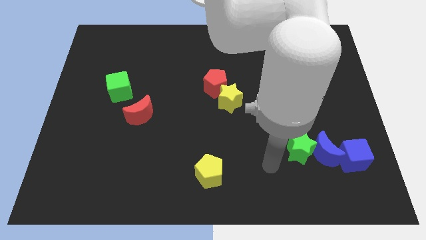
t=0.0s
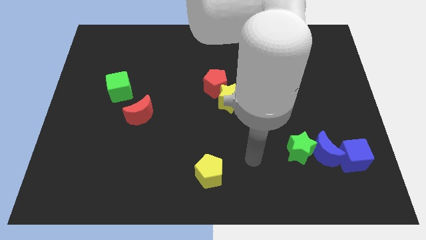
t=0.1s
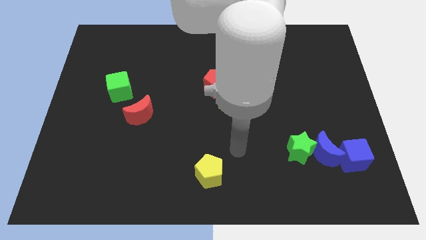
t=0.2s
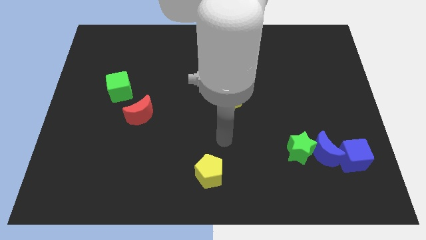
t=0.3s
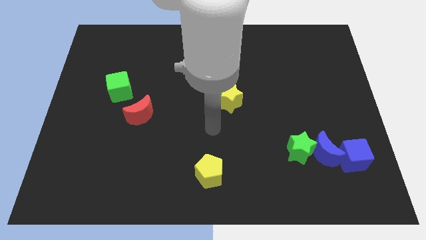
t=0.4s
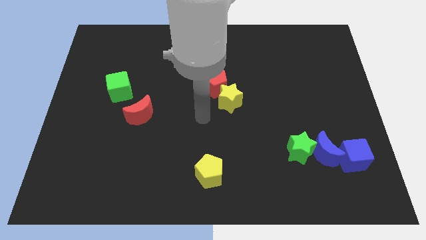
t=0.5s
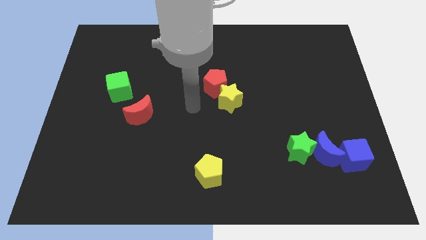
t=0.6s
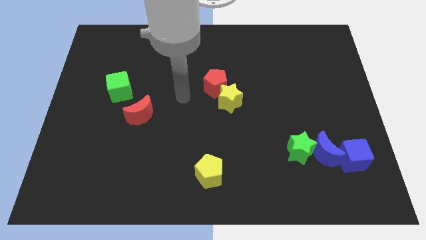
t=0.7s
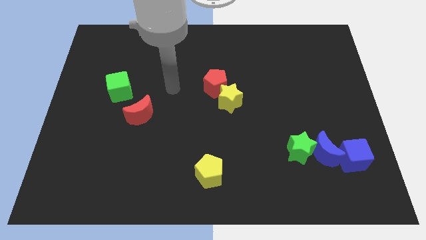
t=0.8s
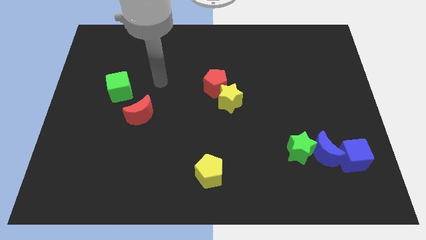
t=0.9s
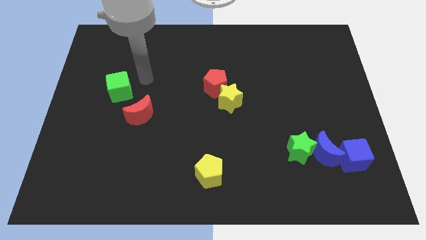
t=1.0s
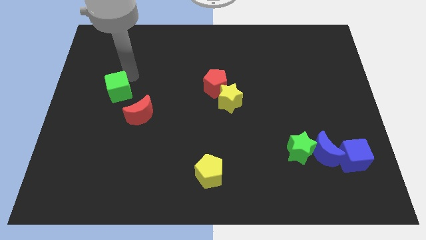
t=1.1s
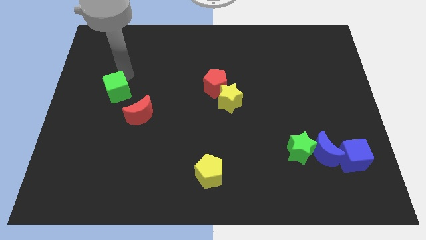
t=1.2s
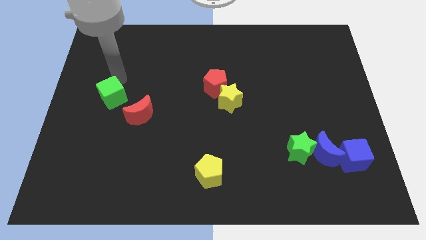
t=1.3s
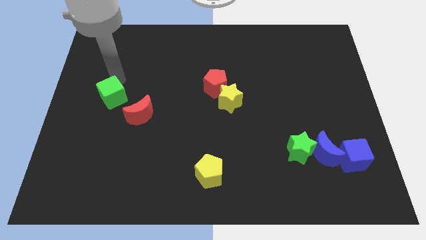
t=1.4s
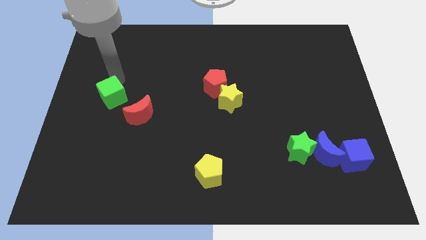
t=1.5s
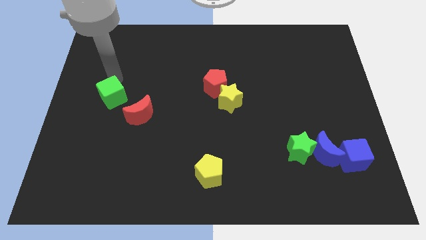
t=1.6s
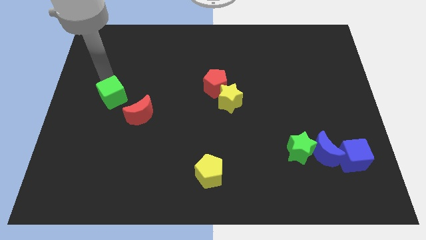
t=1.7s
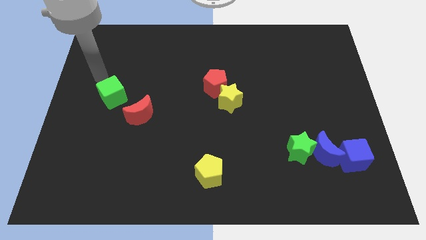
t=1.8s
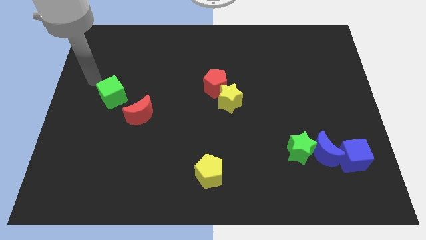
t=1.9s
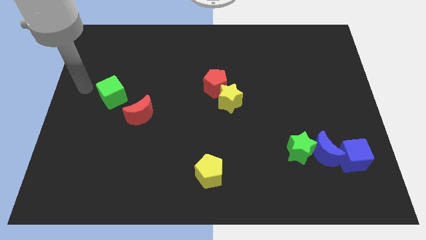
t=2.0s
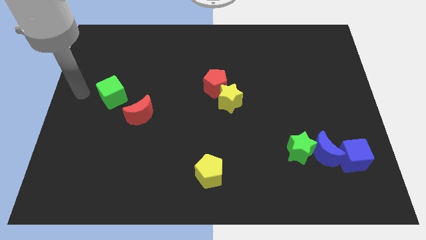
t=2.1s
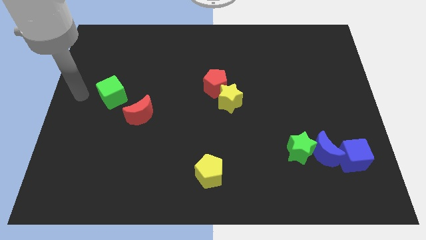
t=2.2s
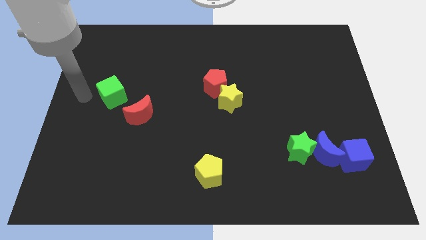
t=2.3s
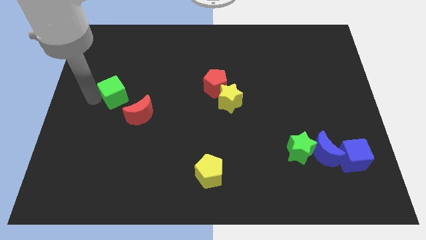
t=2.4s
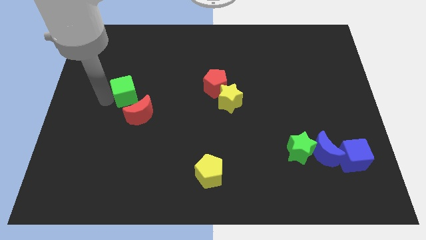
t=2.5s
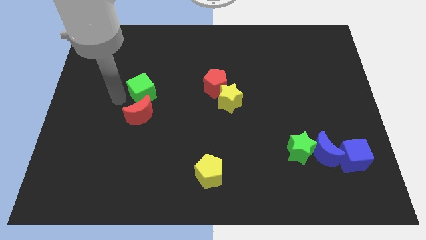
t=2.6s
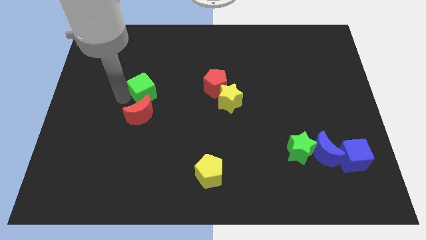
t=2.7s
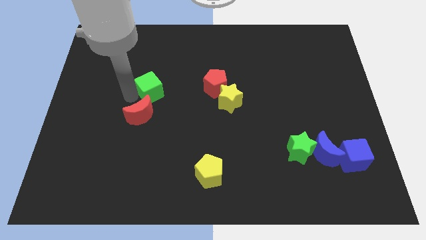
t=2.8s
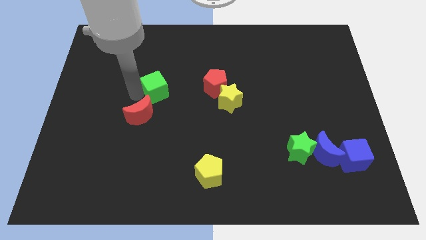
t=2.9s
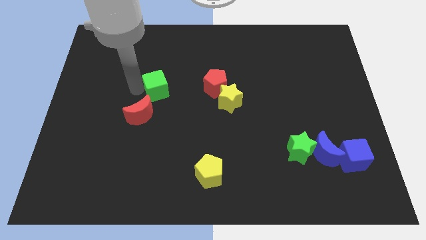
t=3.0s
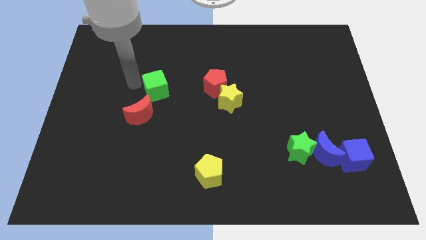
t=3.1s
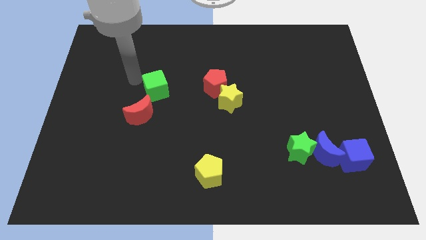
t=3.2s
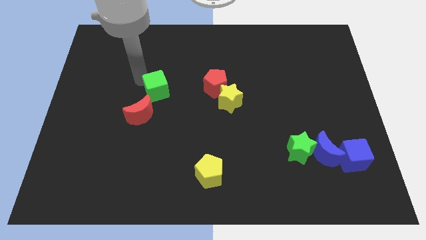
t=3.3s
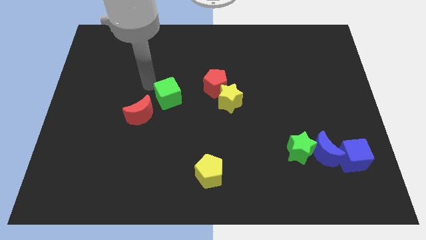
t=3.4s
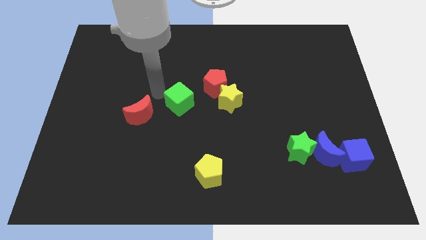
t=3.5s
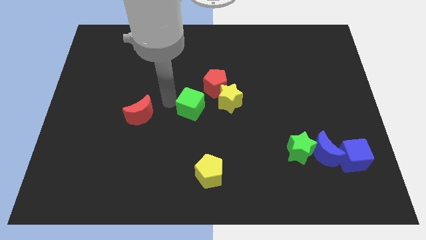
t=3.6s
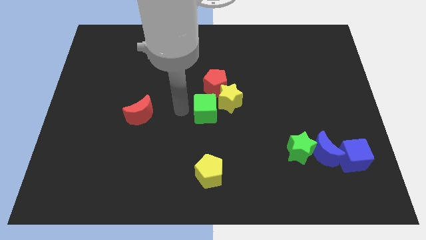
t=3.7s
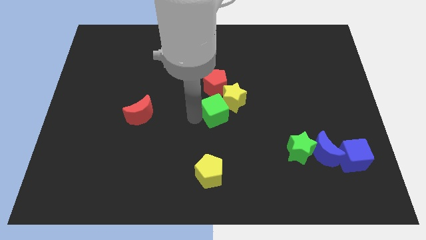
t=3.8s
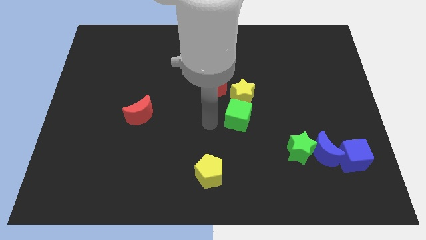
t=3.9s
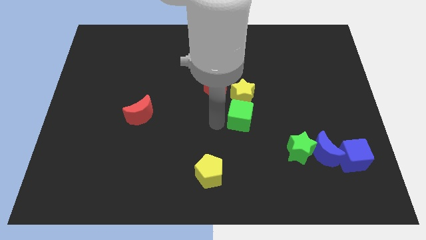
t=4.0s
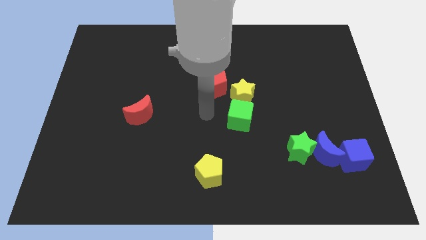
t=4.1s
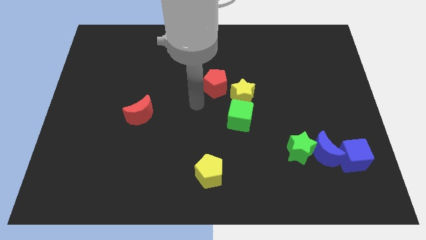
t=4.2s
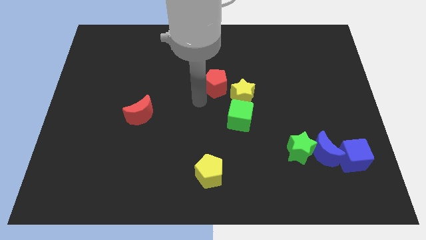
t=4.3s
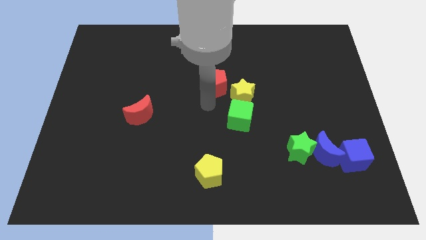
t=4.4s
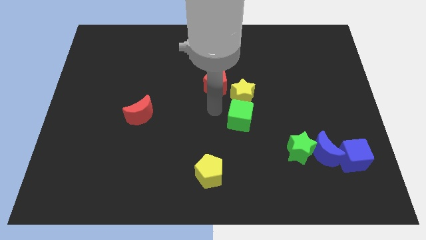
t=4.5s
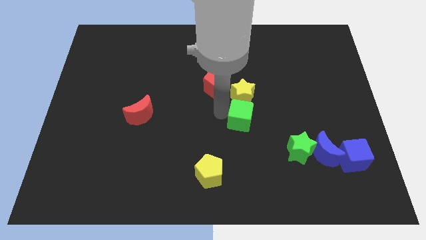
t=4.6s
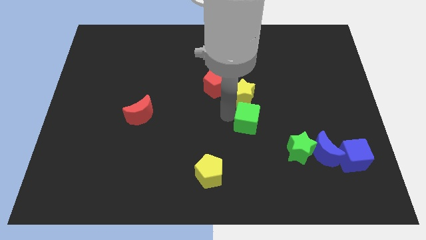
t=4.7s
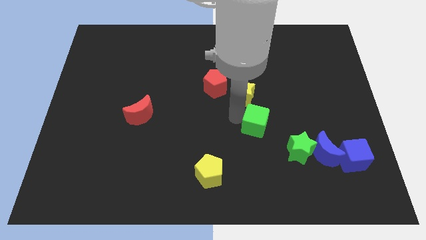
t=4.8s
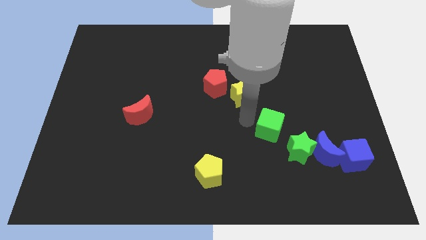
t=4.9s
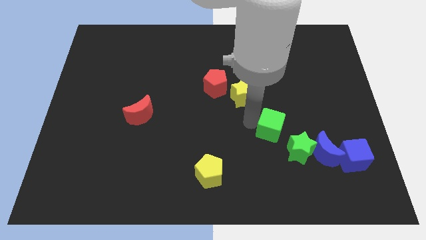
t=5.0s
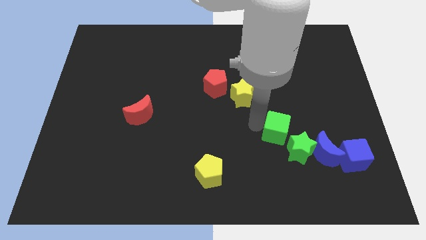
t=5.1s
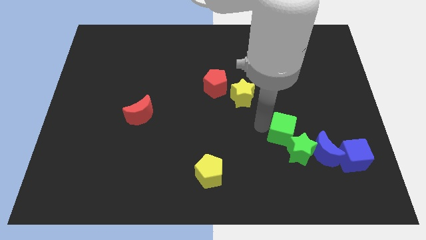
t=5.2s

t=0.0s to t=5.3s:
push green cube into the green star

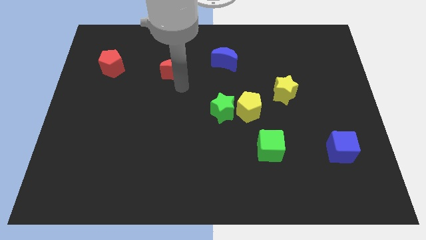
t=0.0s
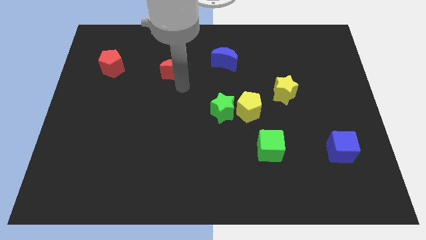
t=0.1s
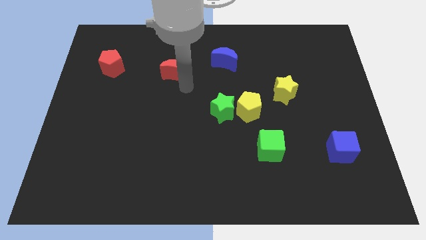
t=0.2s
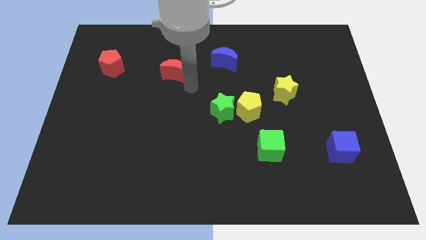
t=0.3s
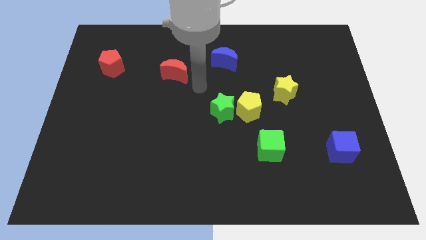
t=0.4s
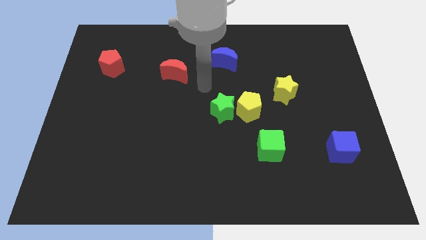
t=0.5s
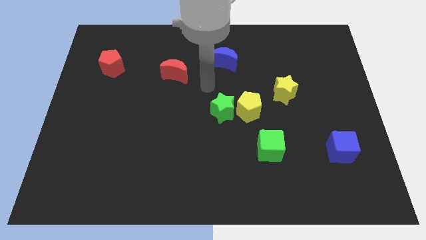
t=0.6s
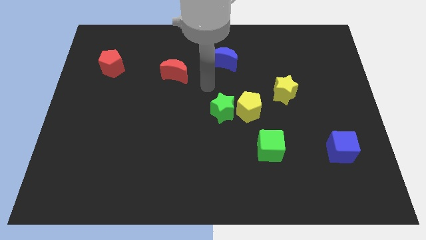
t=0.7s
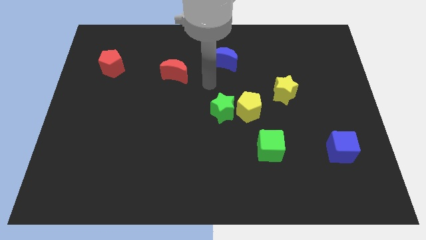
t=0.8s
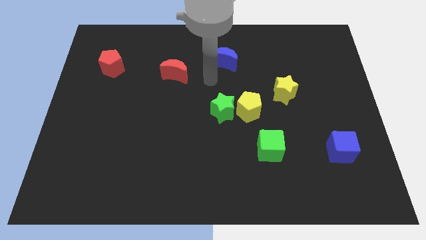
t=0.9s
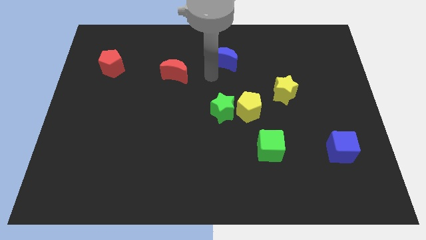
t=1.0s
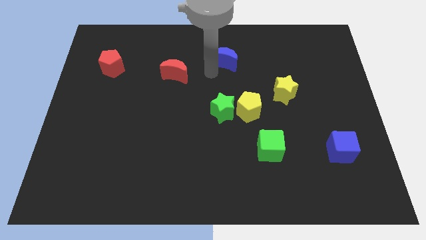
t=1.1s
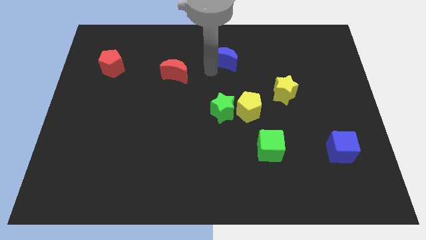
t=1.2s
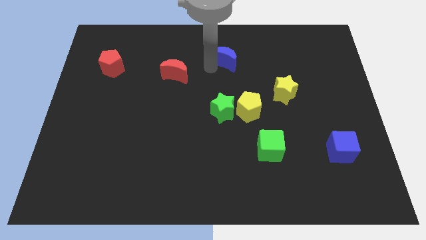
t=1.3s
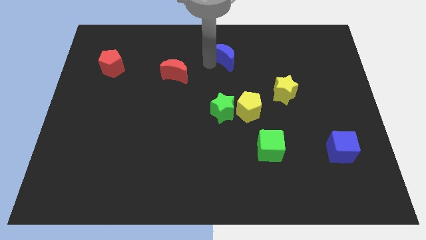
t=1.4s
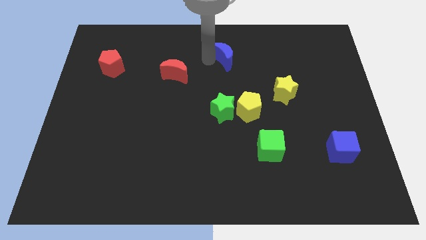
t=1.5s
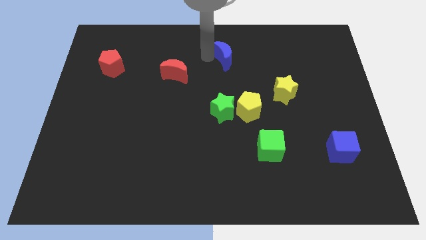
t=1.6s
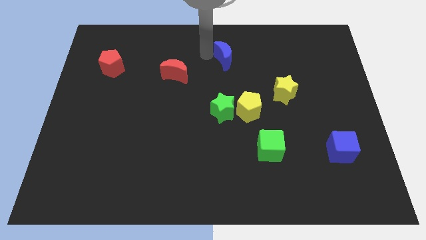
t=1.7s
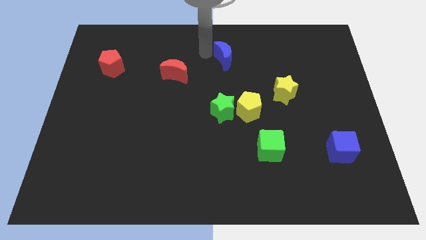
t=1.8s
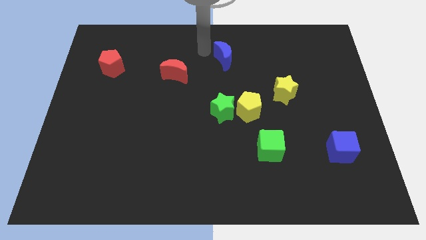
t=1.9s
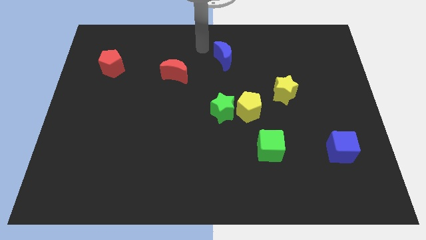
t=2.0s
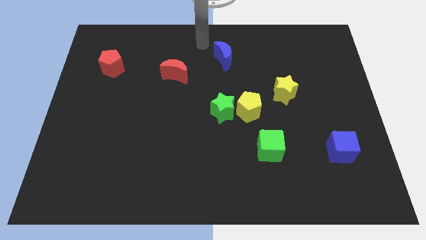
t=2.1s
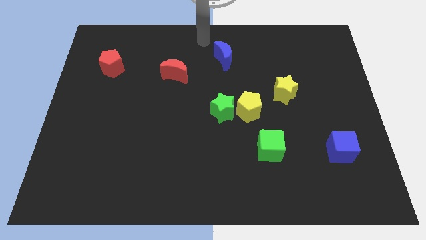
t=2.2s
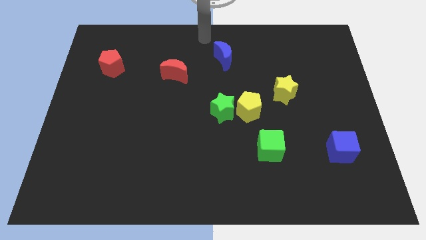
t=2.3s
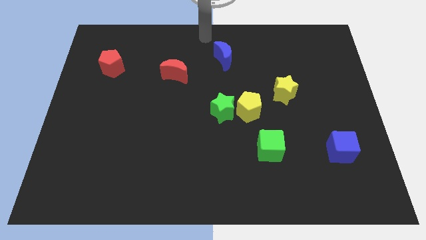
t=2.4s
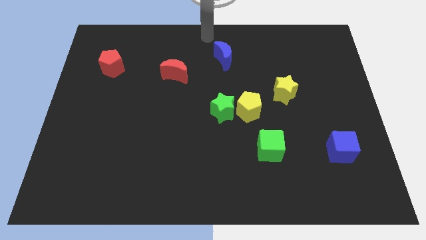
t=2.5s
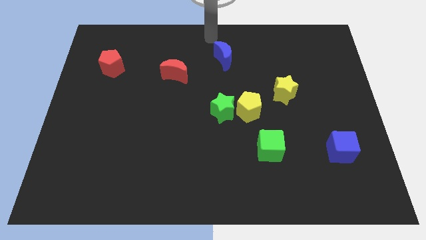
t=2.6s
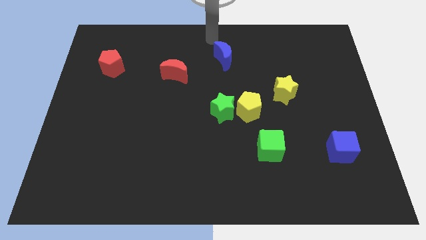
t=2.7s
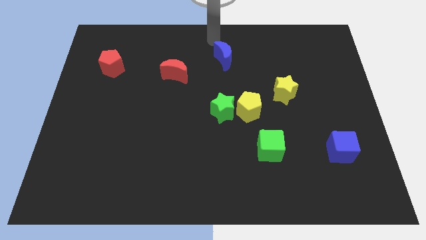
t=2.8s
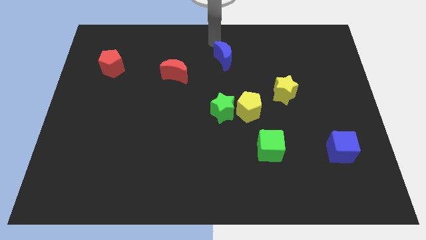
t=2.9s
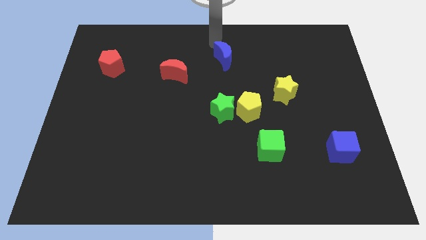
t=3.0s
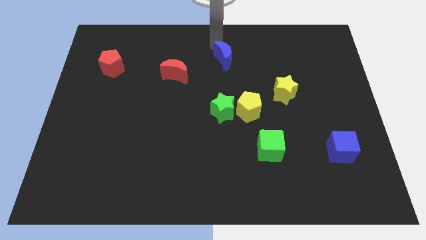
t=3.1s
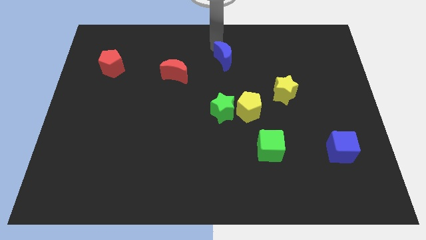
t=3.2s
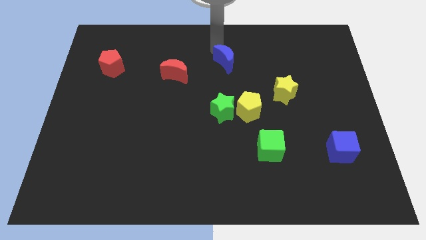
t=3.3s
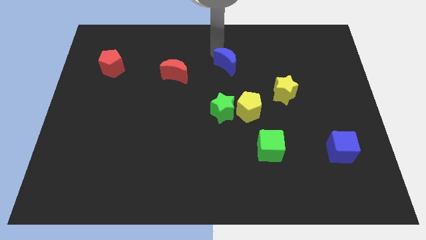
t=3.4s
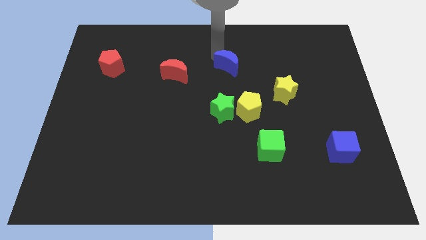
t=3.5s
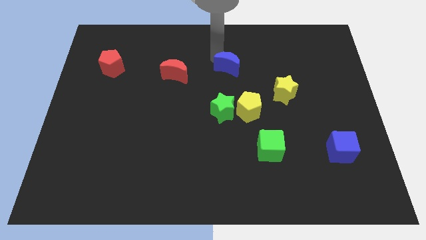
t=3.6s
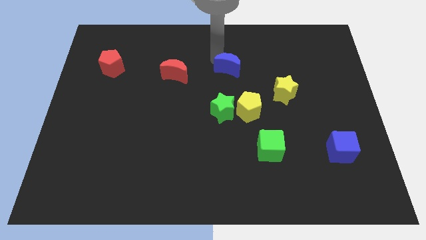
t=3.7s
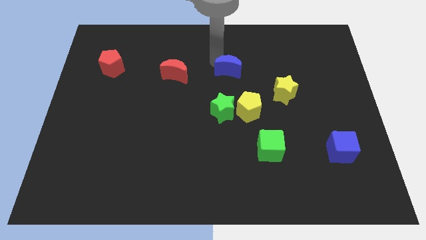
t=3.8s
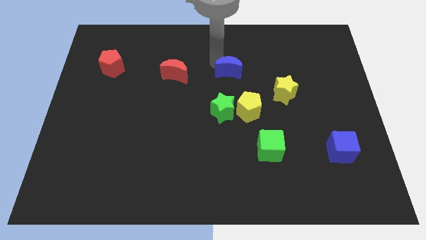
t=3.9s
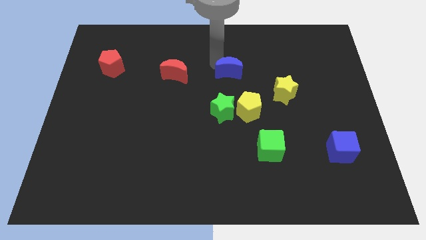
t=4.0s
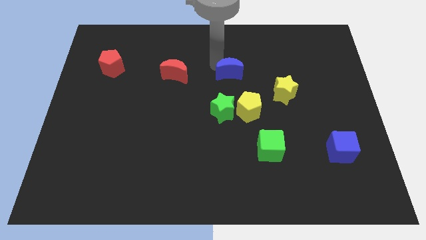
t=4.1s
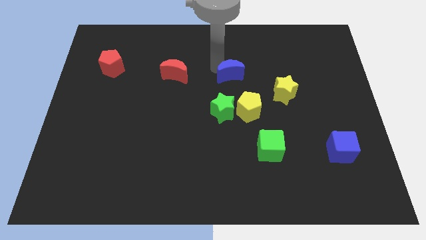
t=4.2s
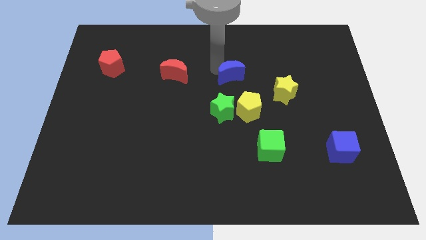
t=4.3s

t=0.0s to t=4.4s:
place the blue moon to the right of the red moon
